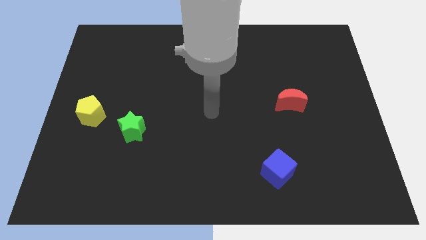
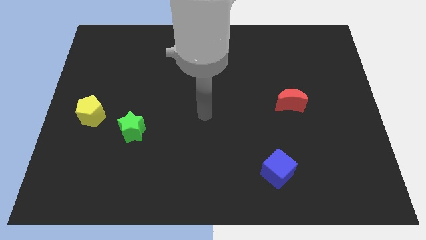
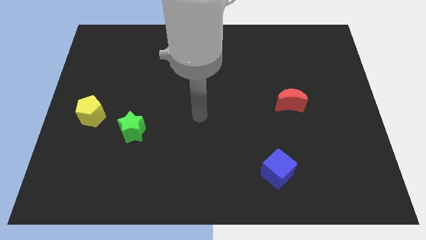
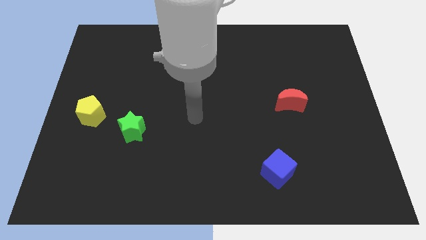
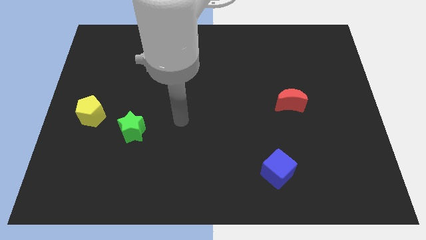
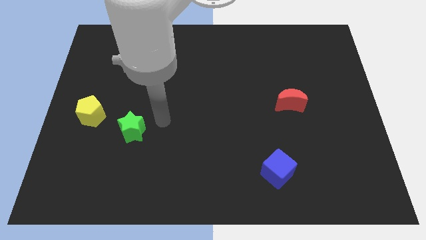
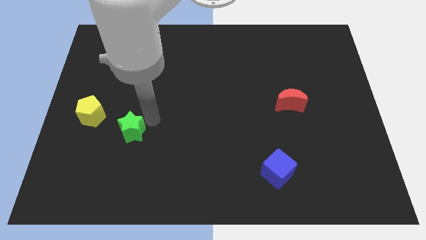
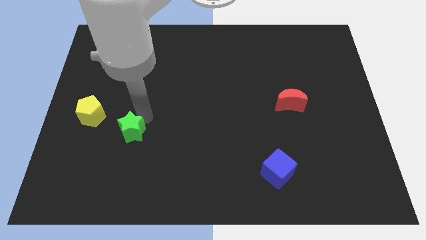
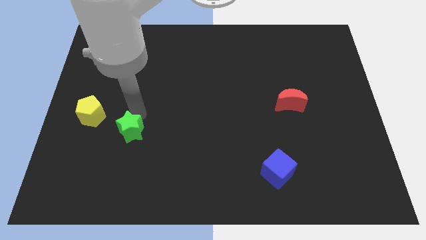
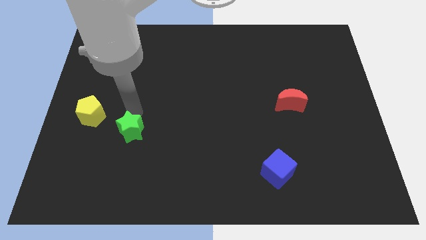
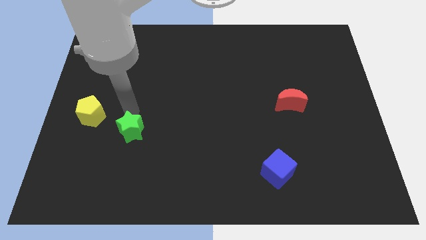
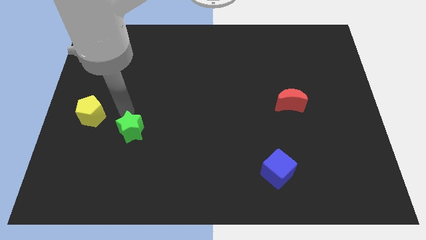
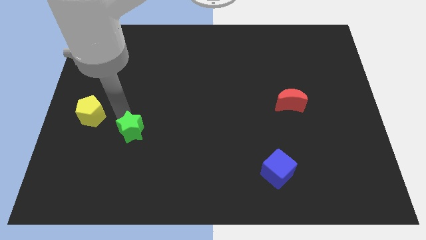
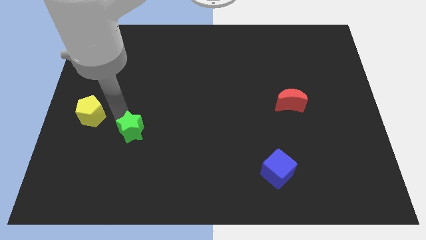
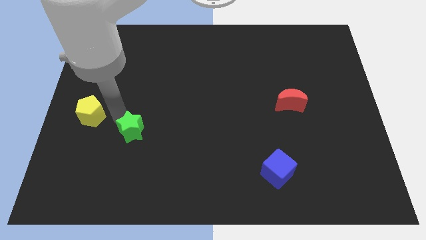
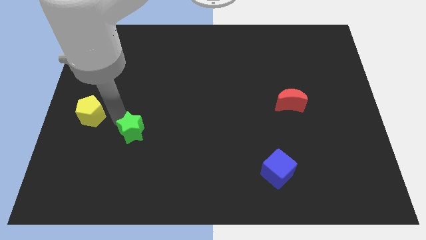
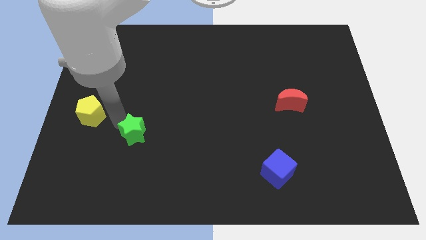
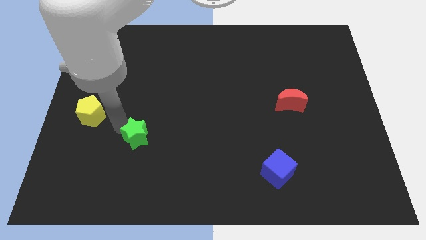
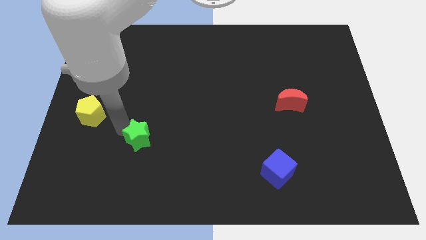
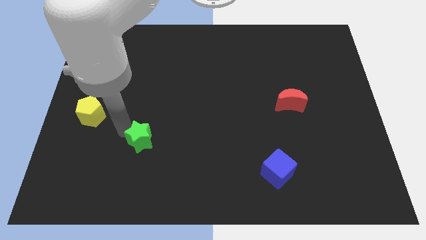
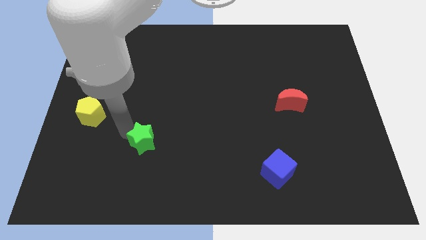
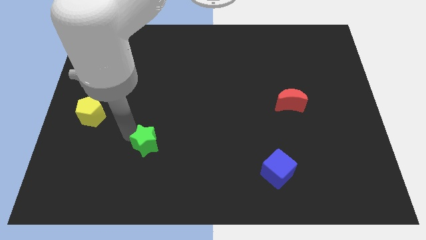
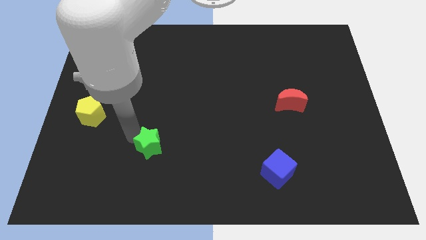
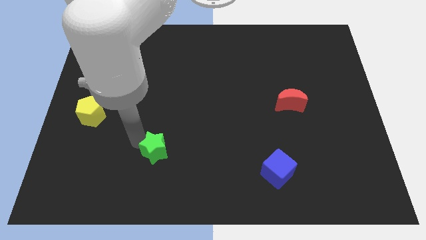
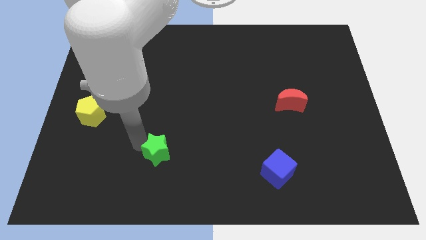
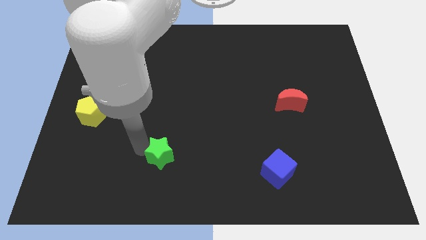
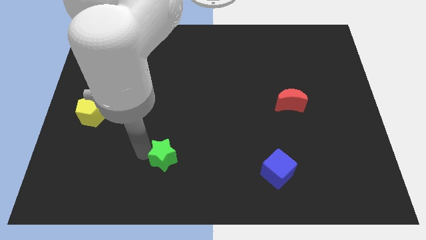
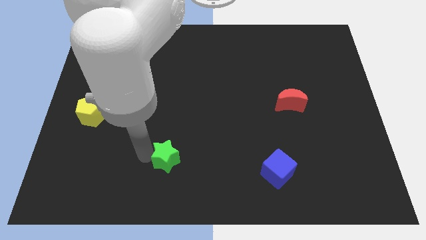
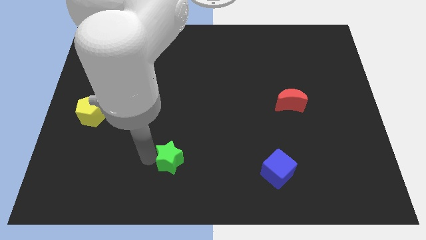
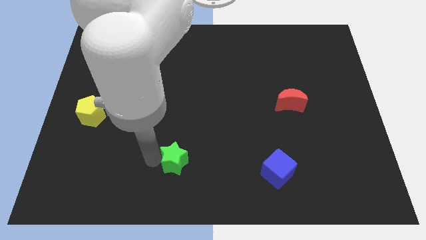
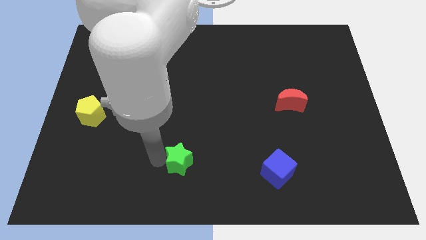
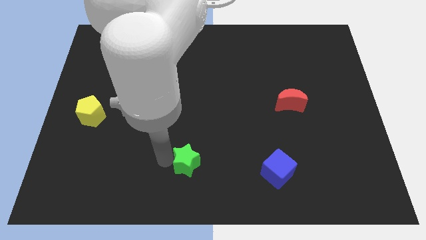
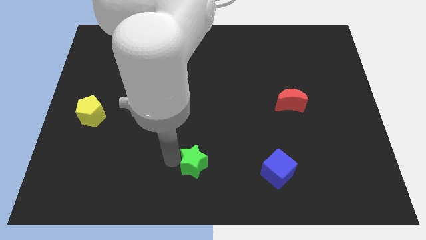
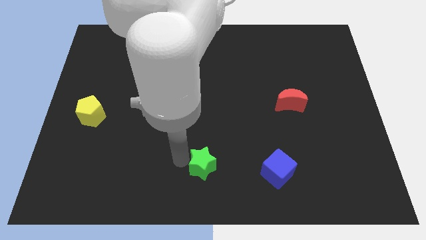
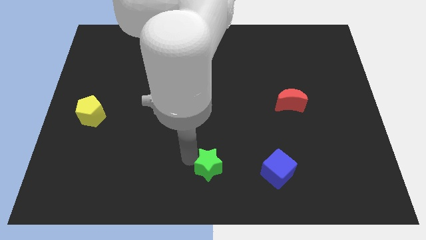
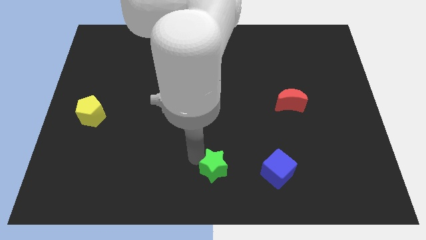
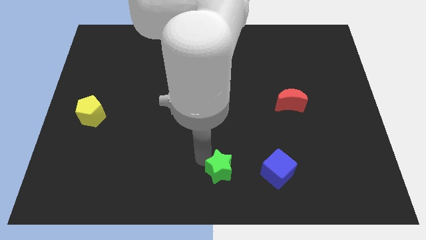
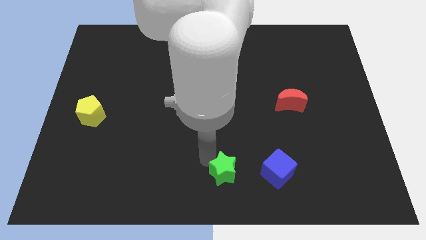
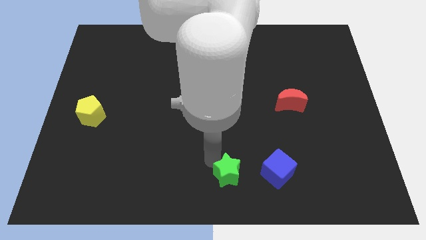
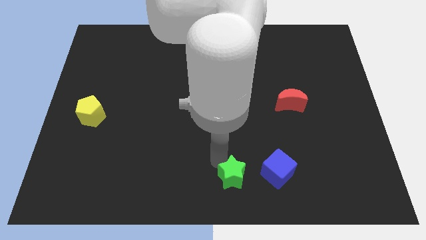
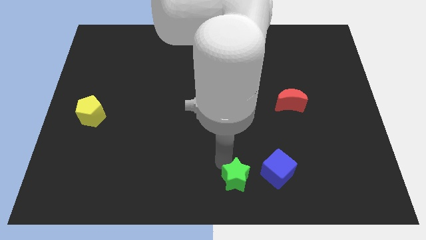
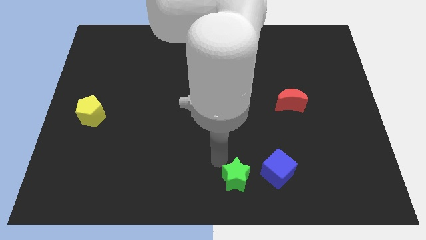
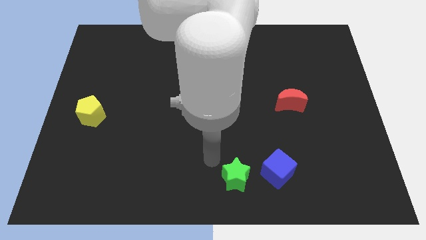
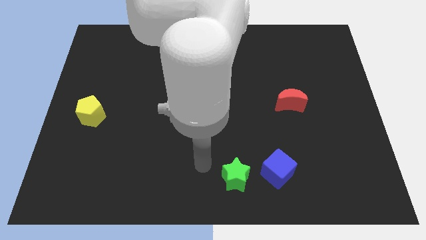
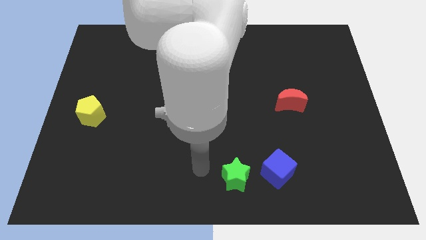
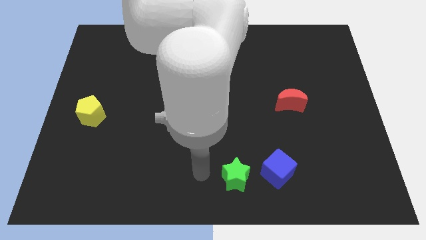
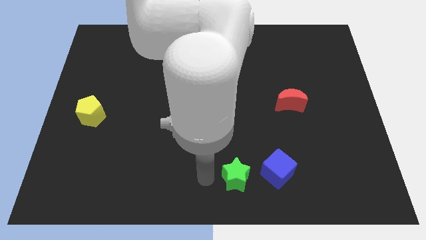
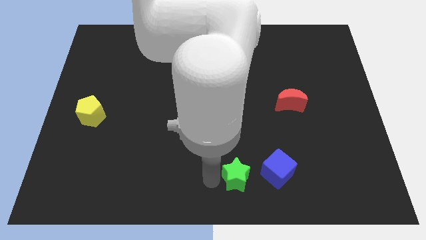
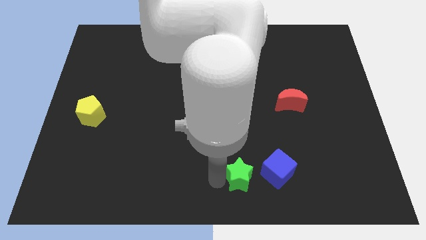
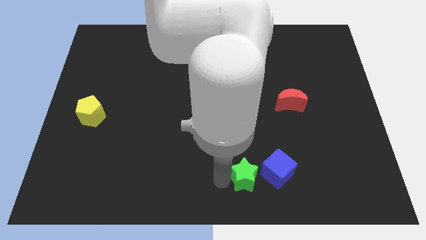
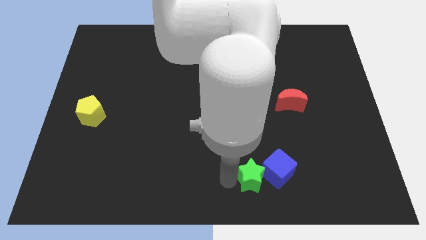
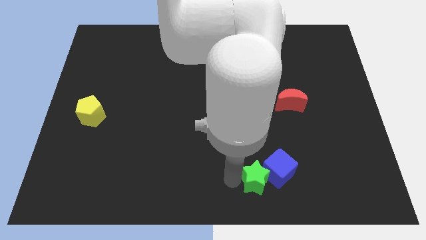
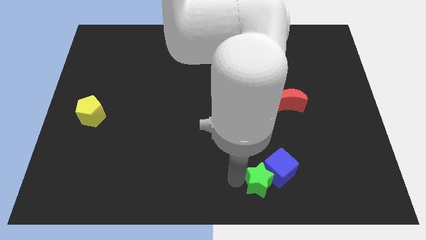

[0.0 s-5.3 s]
move the star to the cube

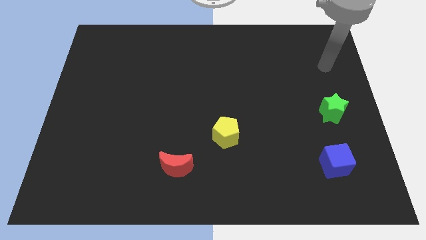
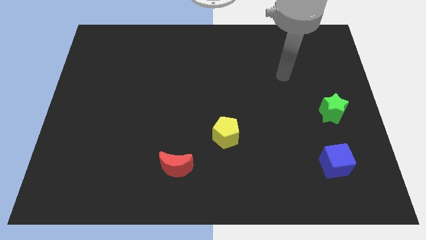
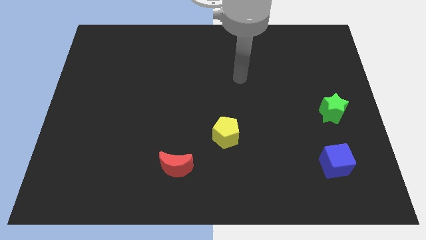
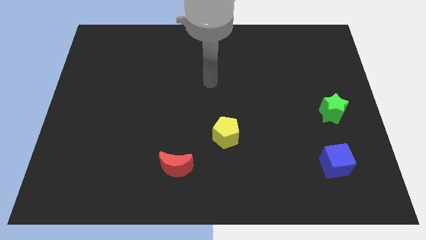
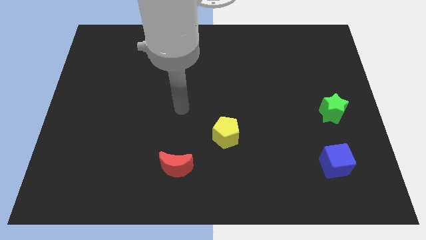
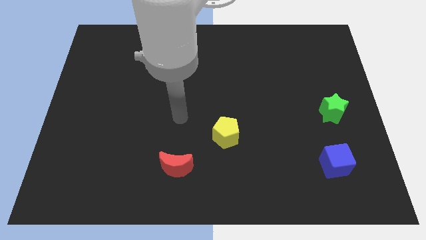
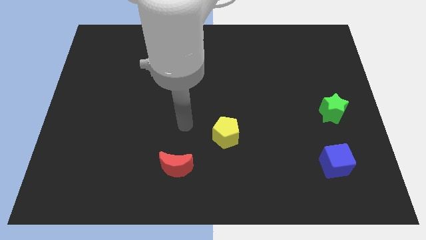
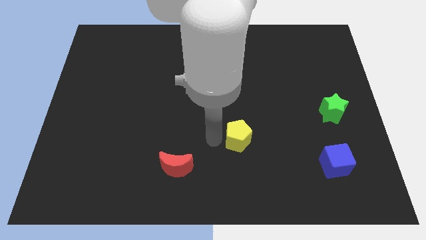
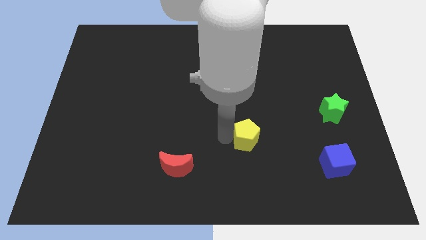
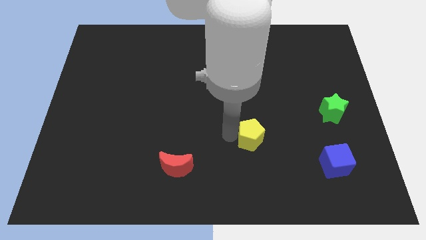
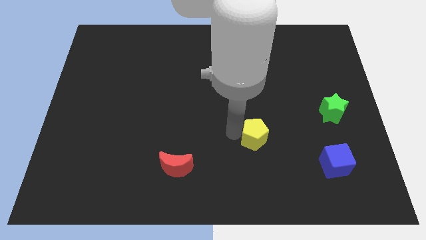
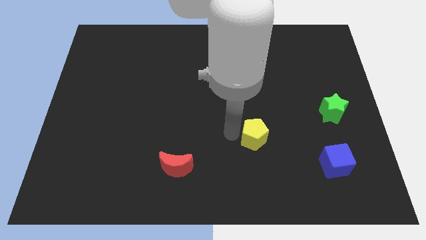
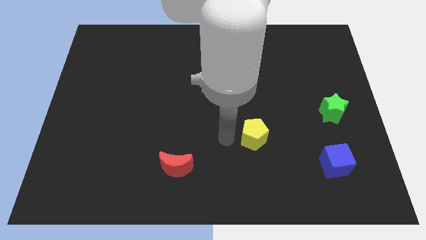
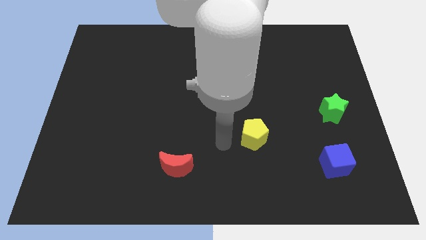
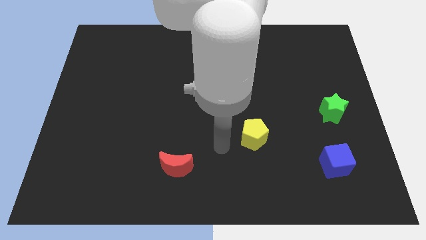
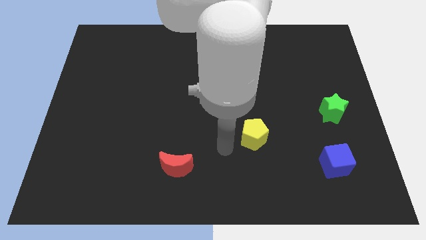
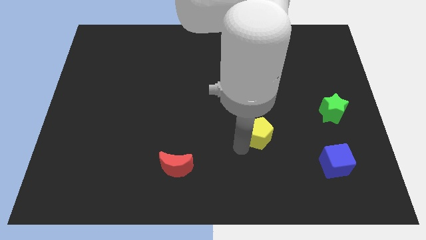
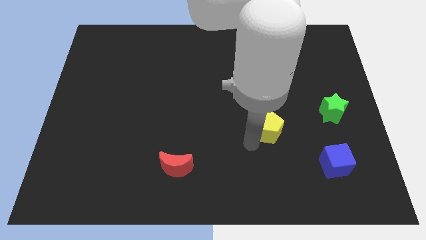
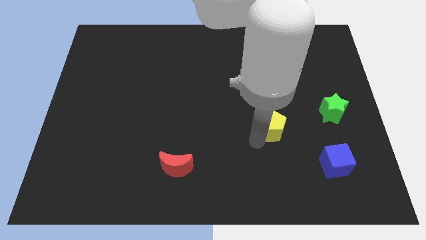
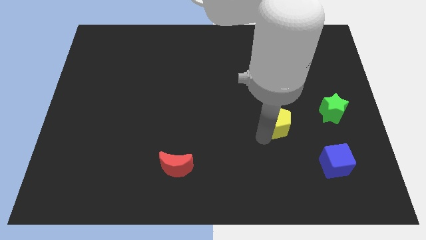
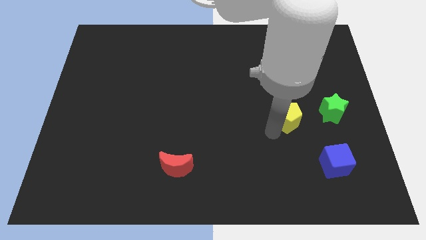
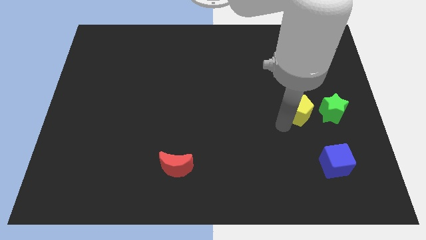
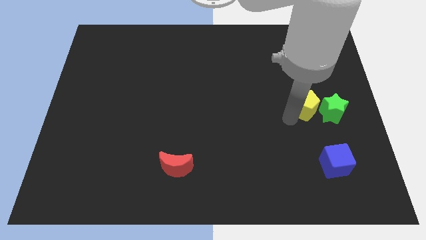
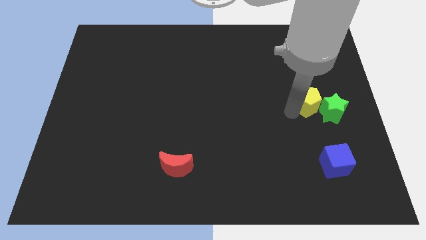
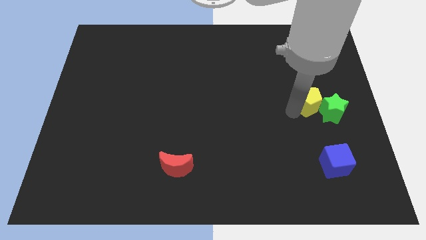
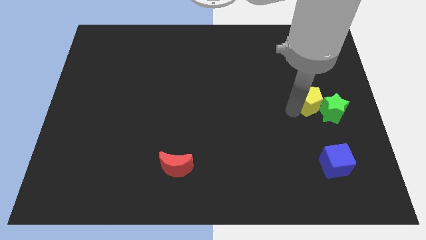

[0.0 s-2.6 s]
slide the yellow pentagon next to the star

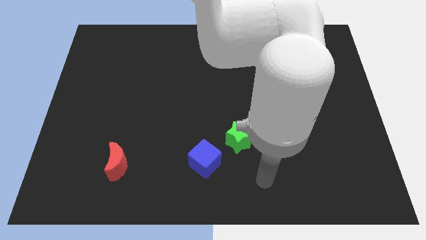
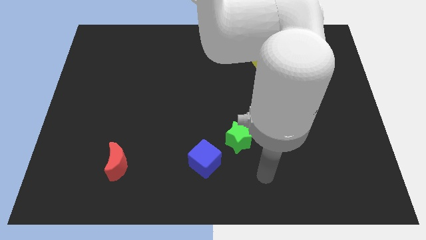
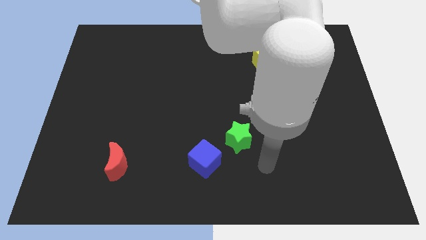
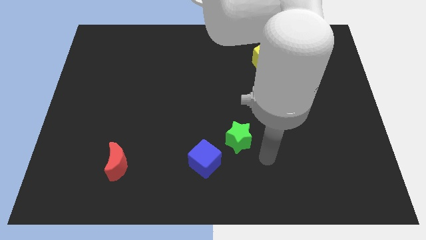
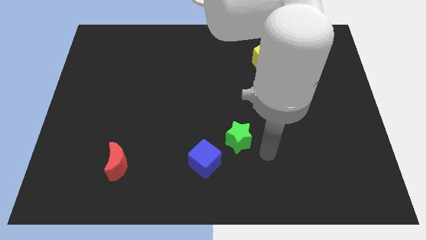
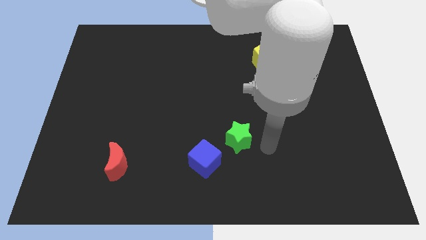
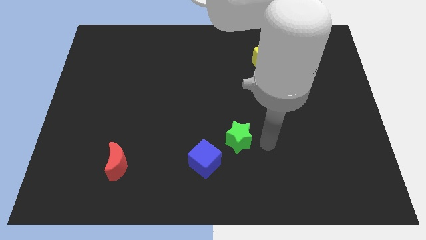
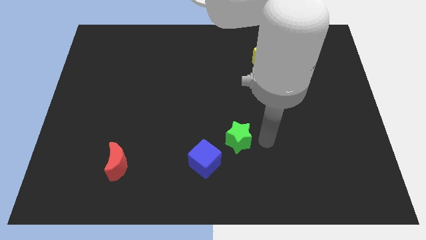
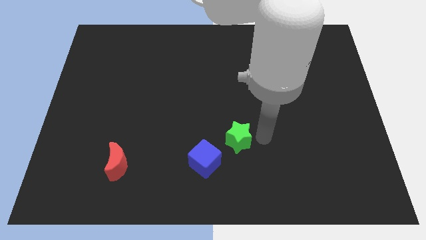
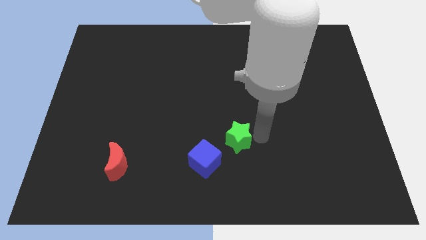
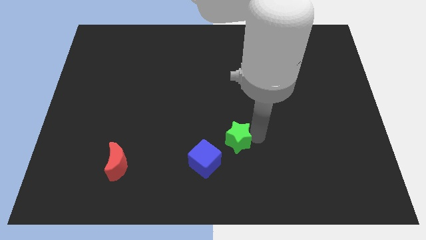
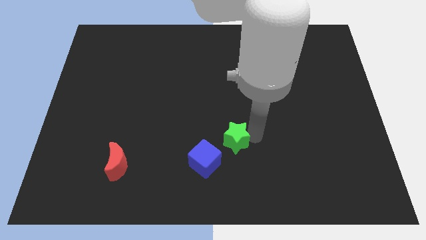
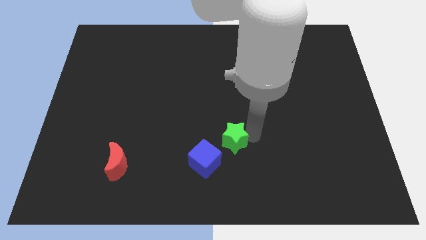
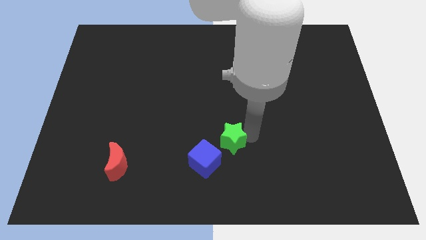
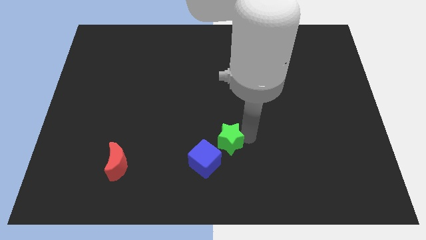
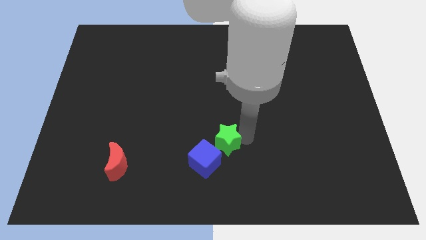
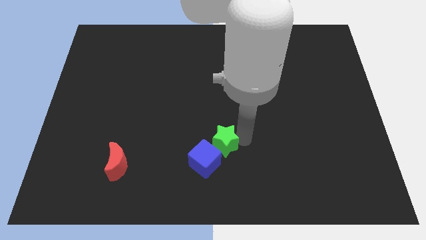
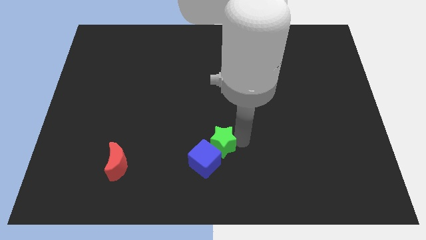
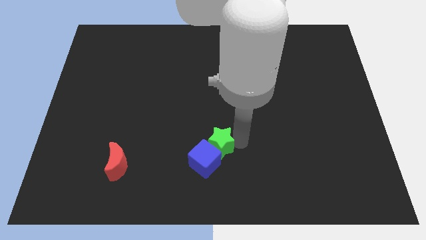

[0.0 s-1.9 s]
move the green block next to the blue block
